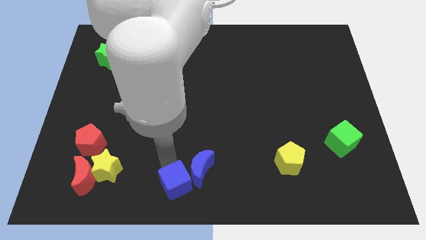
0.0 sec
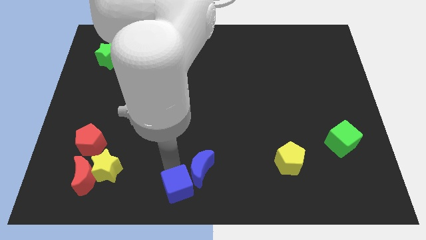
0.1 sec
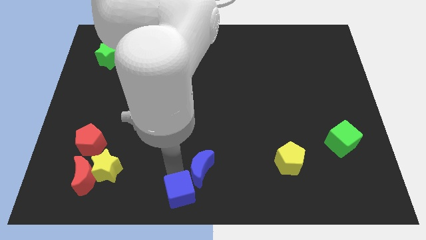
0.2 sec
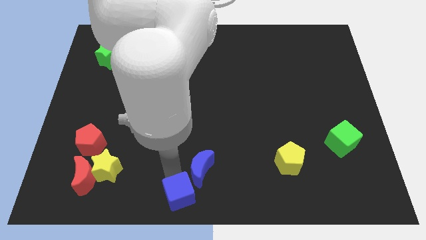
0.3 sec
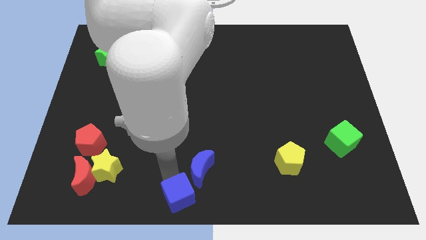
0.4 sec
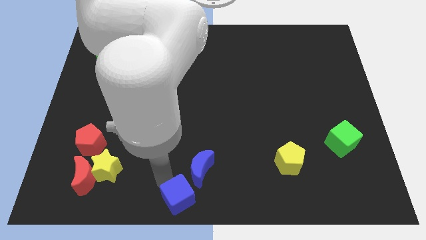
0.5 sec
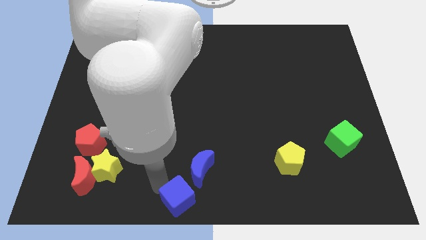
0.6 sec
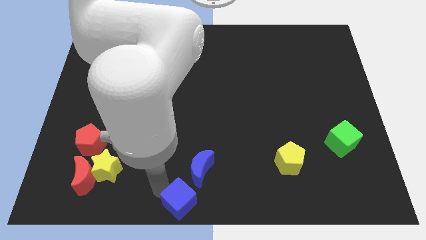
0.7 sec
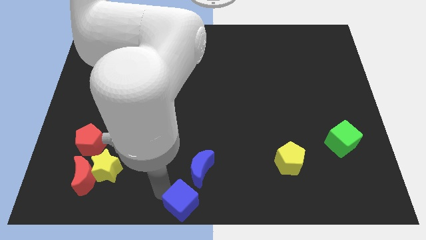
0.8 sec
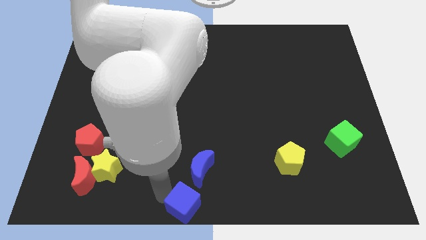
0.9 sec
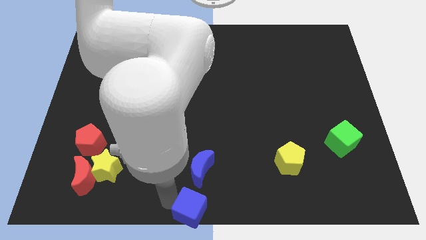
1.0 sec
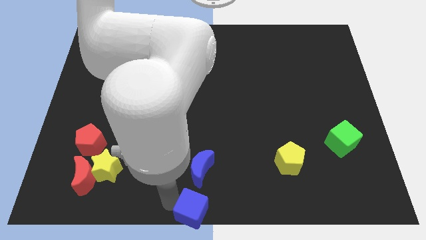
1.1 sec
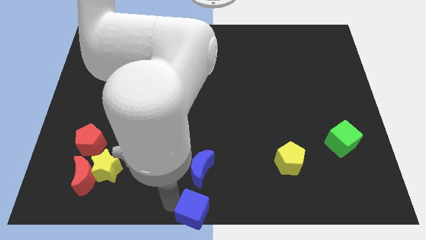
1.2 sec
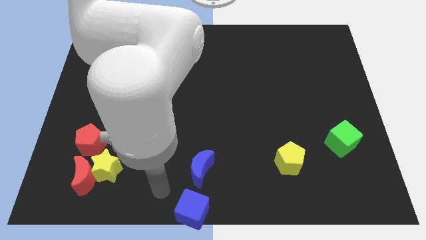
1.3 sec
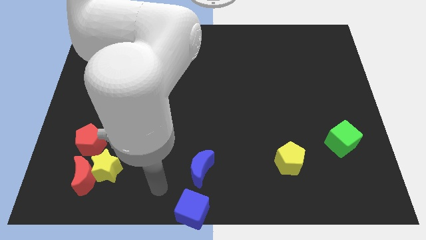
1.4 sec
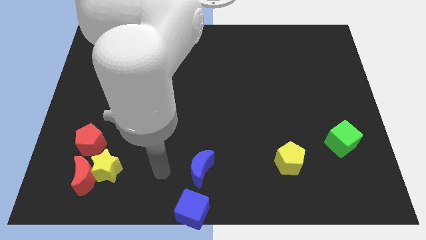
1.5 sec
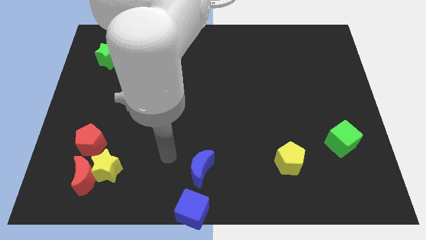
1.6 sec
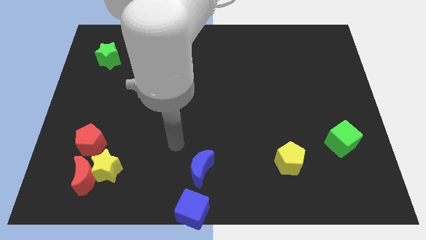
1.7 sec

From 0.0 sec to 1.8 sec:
place the blue cube below to the blue moon

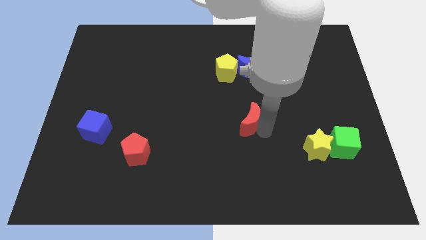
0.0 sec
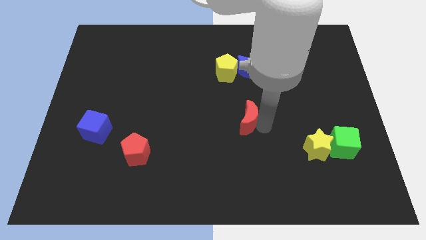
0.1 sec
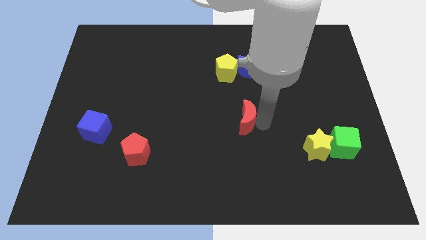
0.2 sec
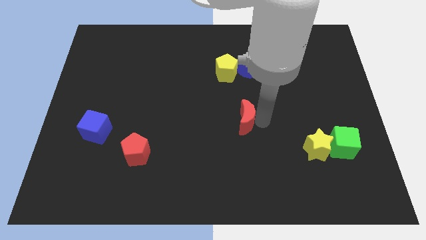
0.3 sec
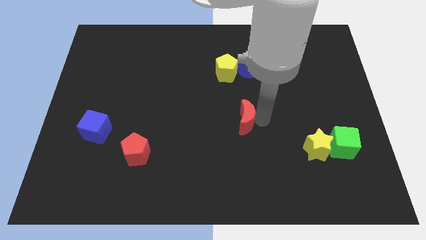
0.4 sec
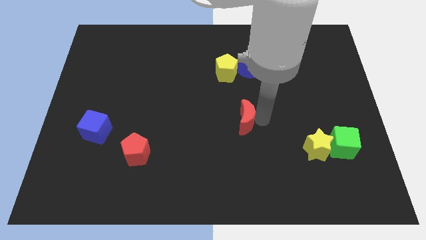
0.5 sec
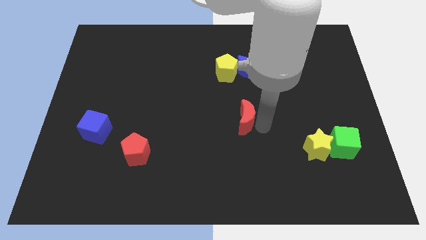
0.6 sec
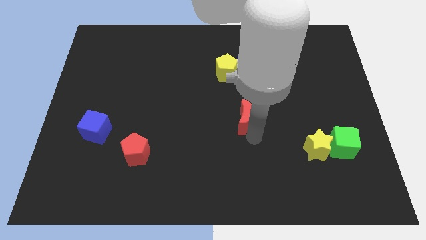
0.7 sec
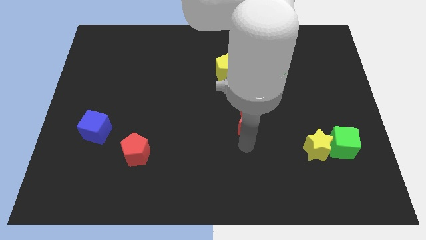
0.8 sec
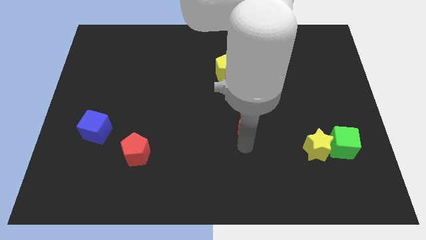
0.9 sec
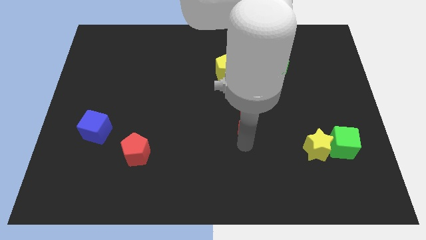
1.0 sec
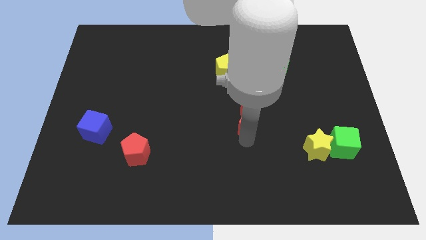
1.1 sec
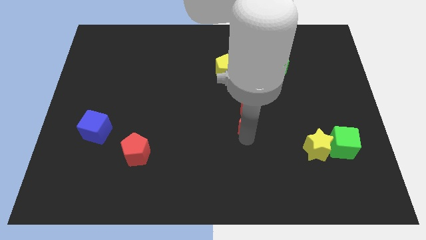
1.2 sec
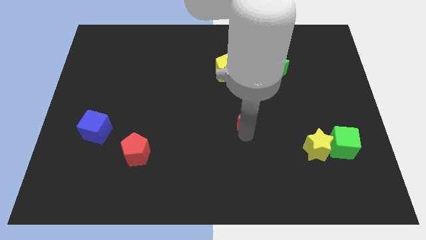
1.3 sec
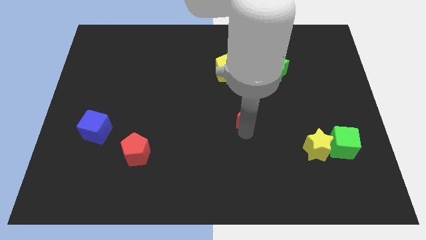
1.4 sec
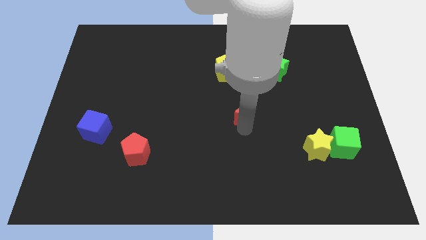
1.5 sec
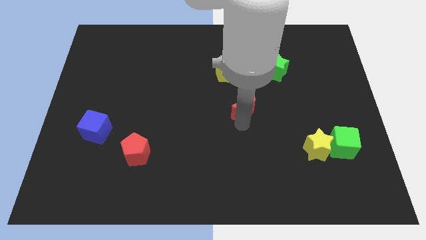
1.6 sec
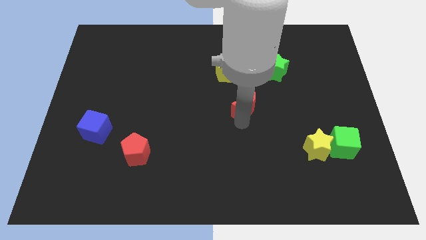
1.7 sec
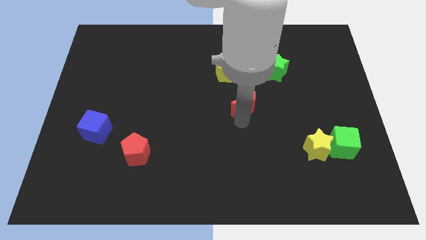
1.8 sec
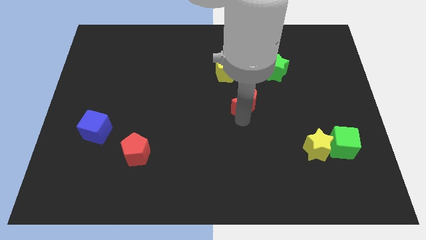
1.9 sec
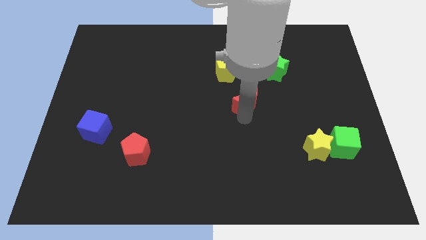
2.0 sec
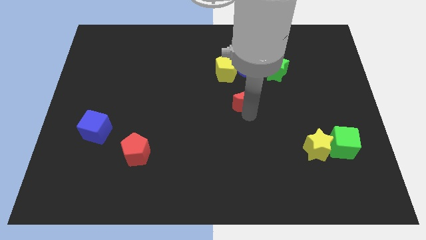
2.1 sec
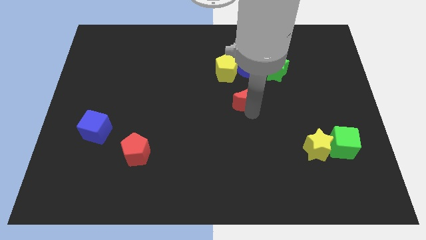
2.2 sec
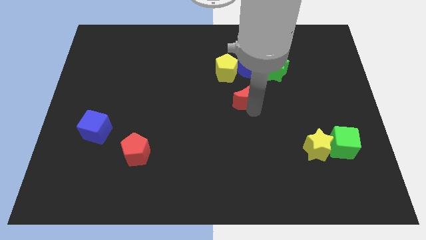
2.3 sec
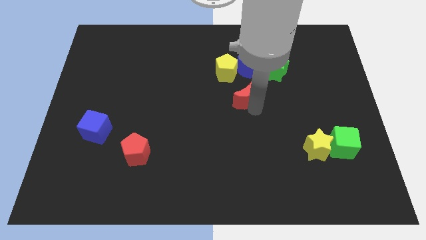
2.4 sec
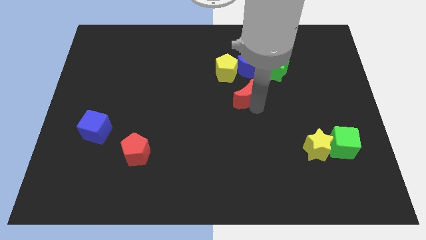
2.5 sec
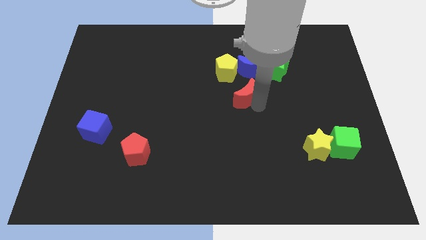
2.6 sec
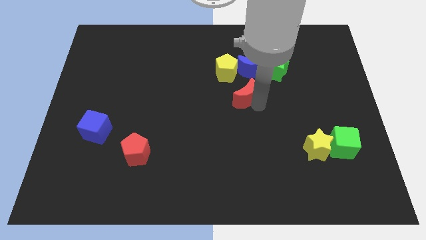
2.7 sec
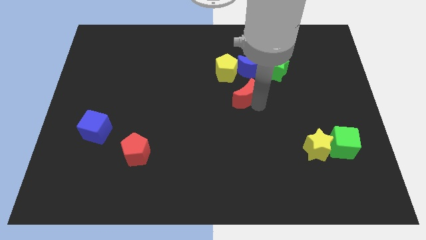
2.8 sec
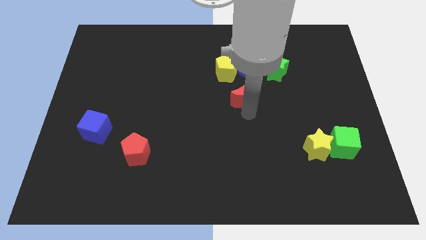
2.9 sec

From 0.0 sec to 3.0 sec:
push the red moon below the blue moon

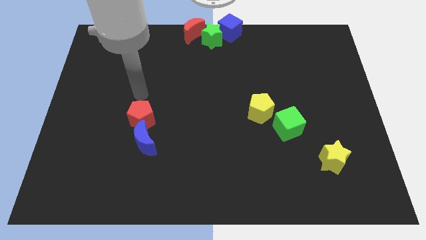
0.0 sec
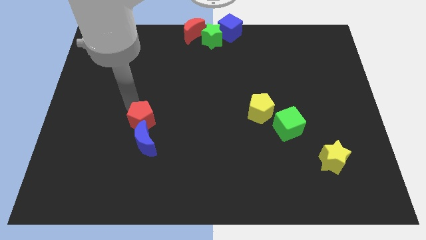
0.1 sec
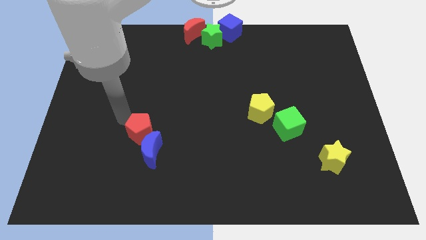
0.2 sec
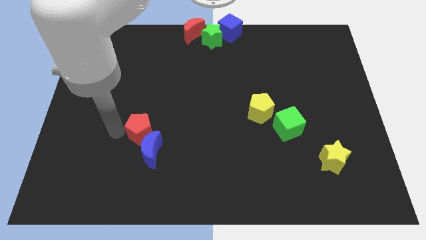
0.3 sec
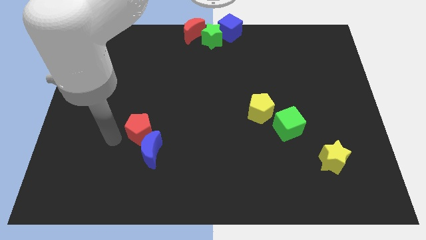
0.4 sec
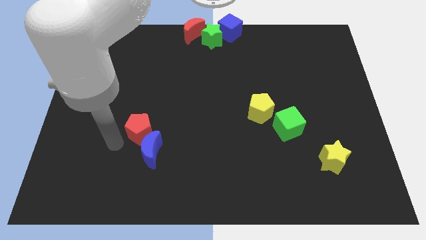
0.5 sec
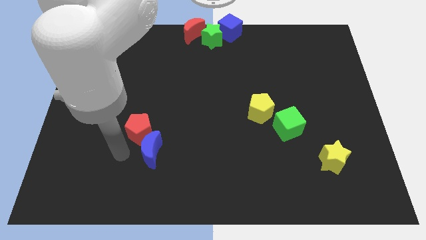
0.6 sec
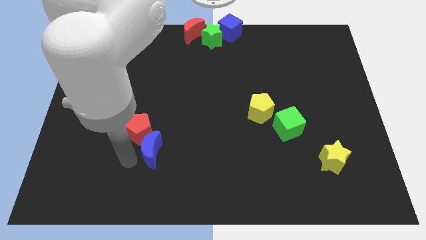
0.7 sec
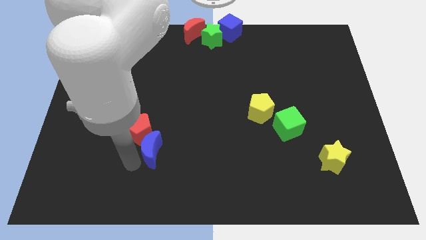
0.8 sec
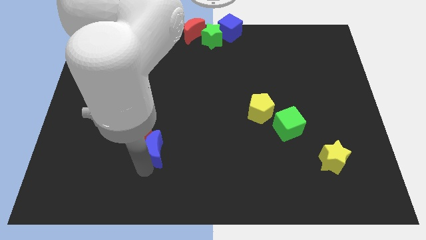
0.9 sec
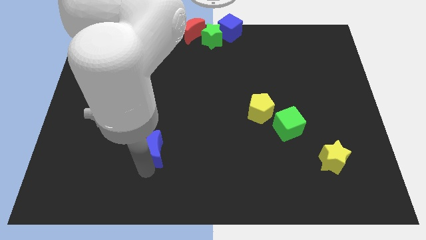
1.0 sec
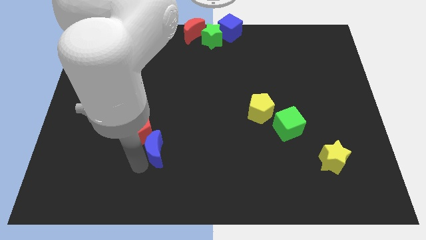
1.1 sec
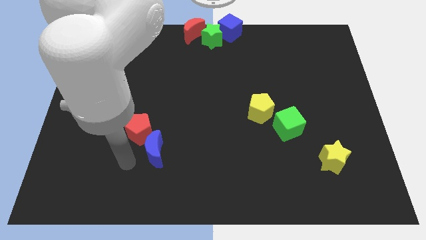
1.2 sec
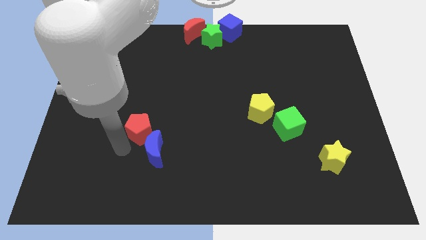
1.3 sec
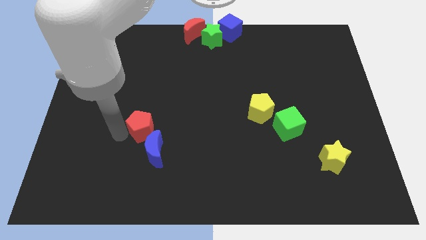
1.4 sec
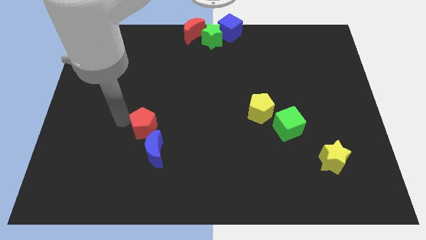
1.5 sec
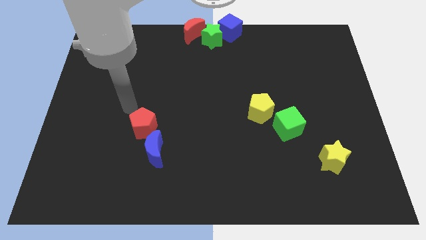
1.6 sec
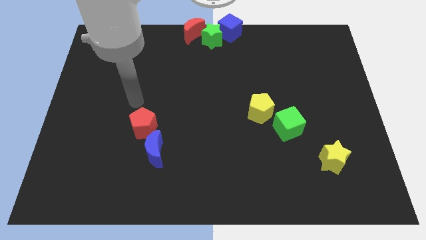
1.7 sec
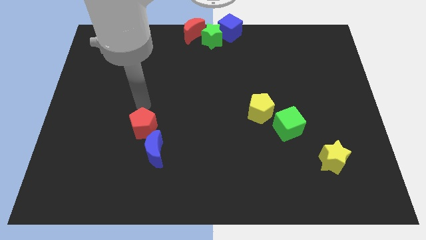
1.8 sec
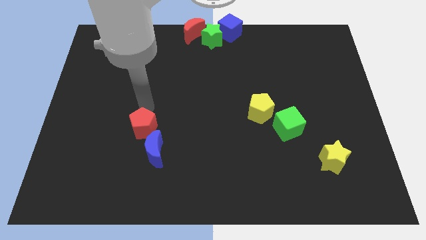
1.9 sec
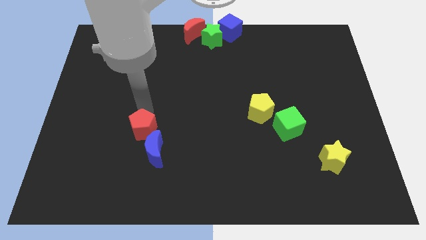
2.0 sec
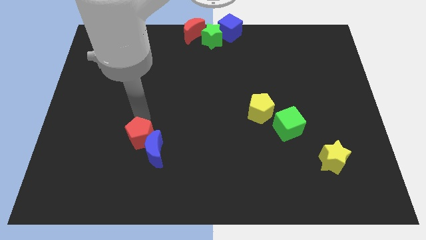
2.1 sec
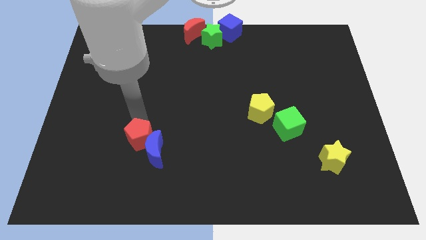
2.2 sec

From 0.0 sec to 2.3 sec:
slightly touch red pentagon

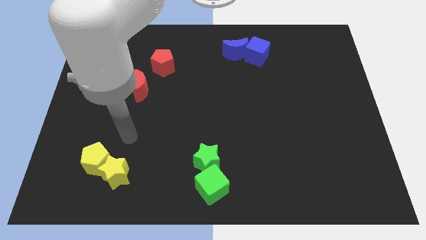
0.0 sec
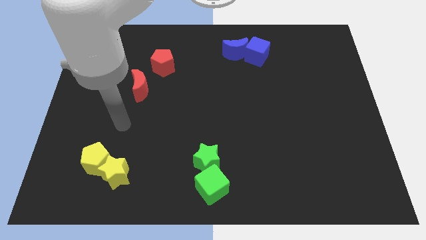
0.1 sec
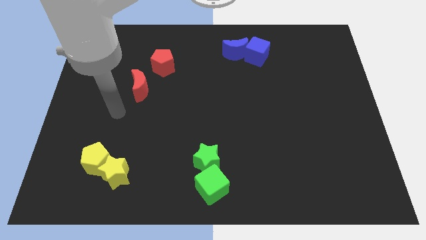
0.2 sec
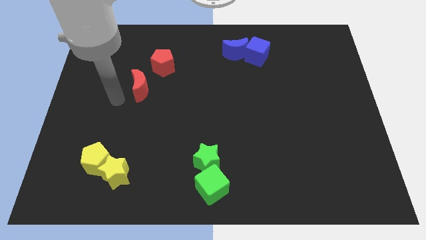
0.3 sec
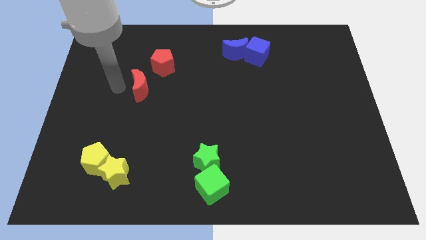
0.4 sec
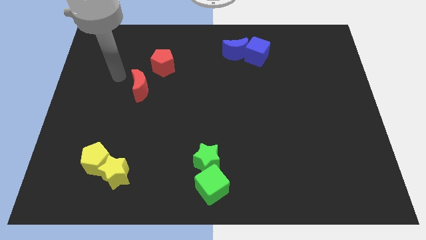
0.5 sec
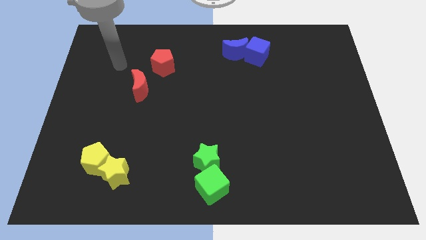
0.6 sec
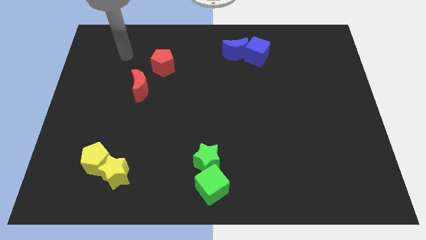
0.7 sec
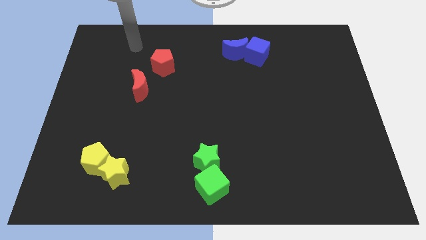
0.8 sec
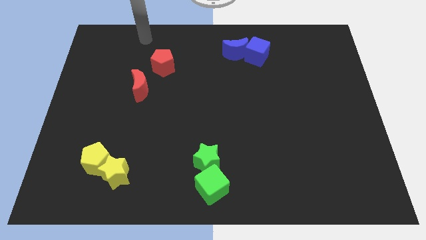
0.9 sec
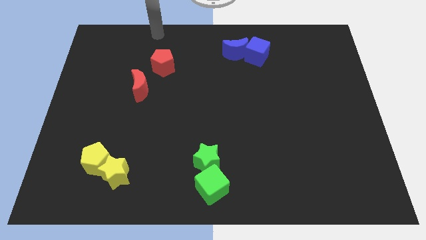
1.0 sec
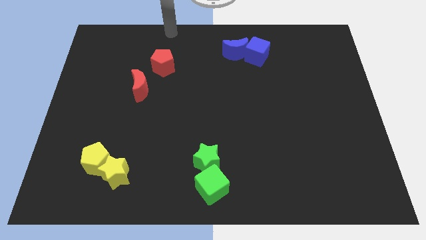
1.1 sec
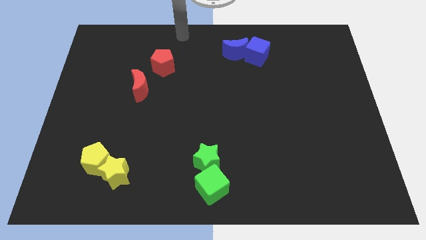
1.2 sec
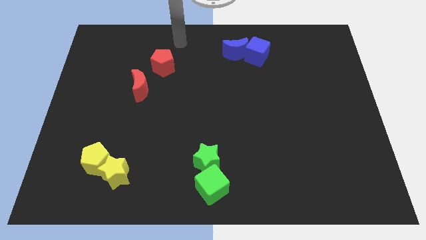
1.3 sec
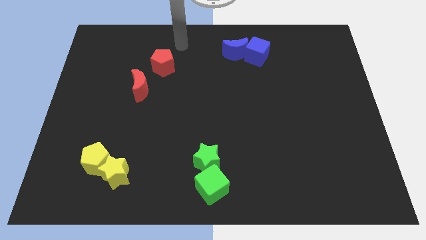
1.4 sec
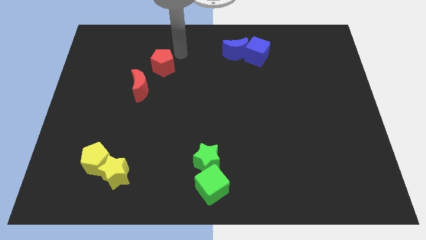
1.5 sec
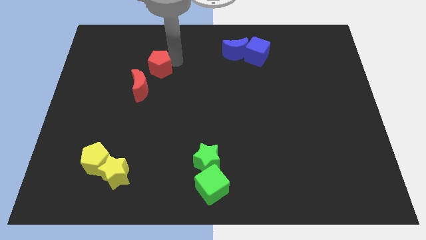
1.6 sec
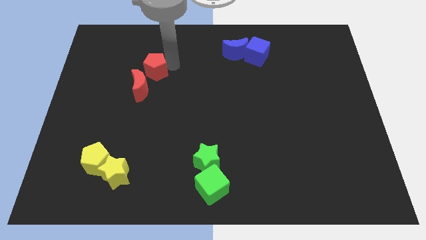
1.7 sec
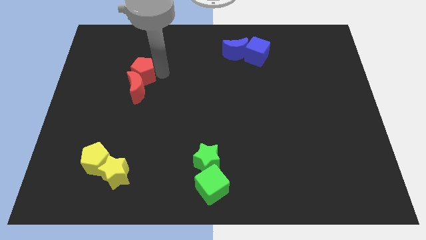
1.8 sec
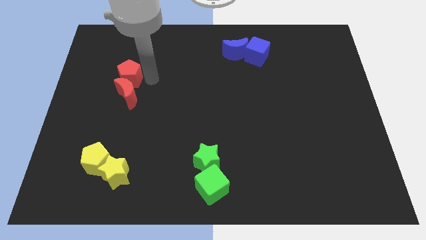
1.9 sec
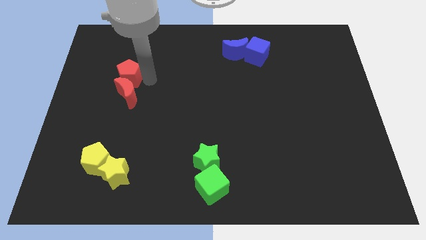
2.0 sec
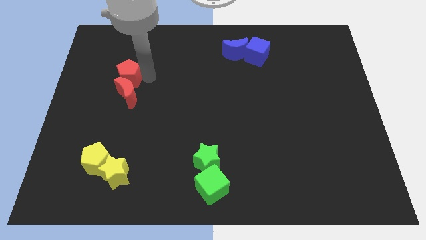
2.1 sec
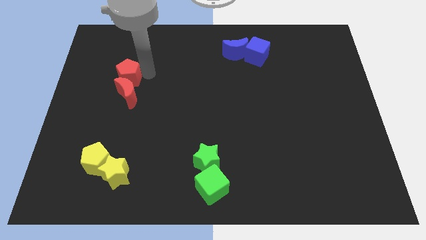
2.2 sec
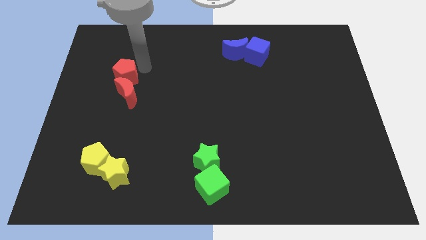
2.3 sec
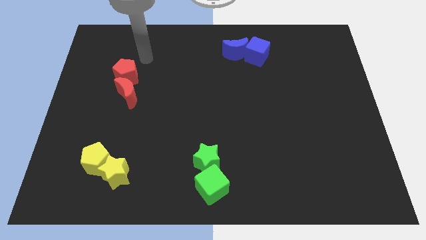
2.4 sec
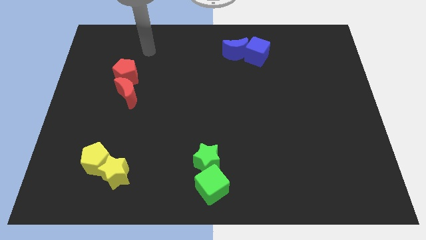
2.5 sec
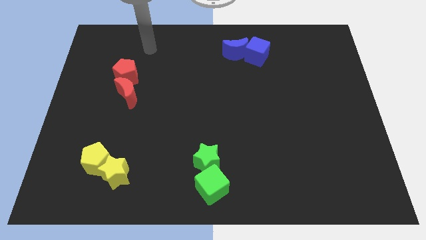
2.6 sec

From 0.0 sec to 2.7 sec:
push red pentagon slightly towards red half moon
